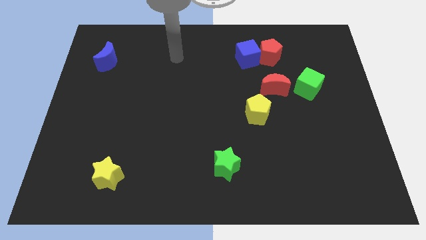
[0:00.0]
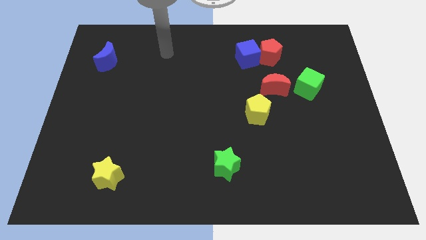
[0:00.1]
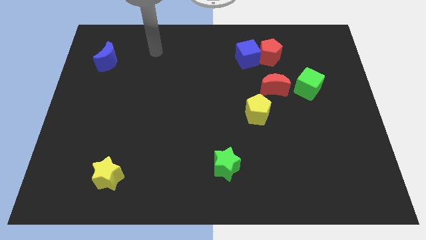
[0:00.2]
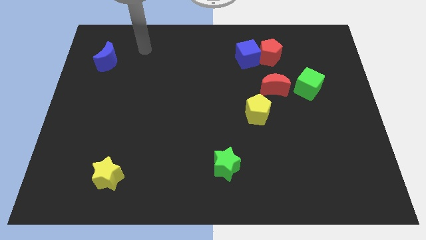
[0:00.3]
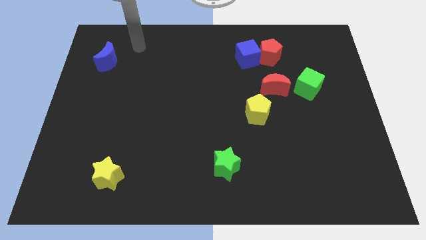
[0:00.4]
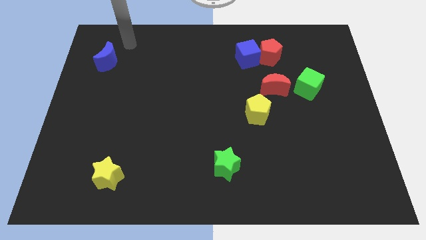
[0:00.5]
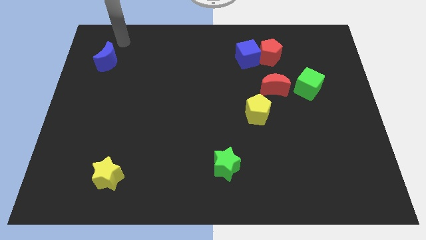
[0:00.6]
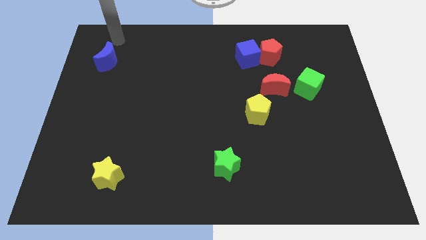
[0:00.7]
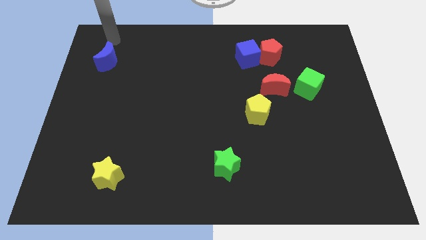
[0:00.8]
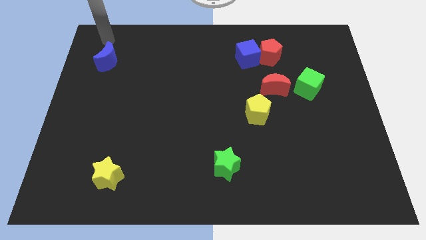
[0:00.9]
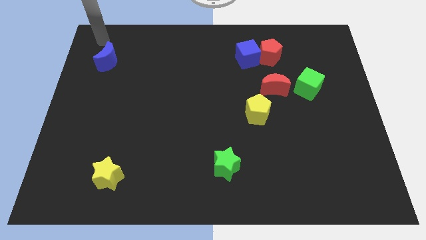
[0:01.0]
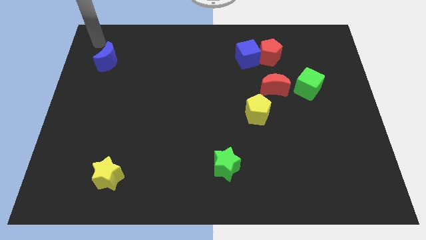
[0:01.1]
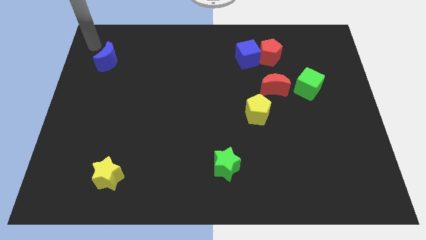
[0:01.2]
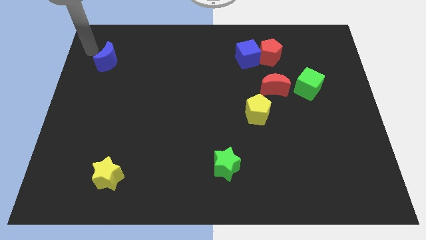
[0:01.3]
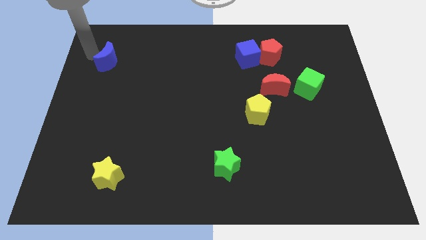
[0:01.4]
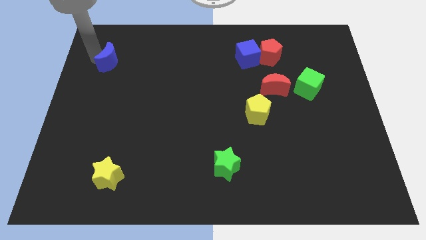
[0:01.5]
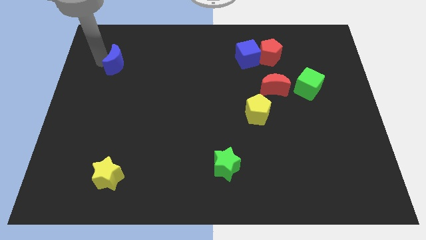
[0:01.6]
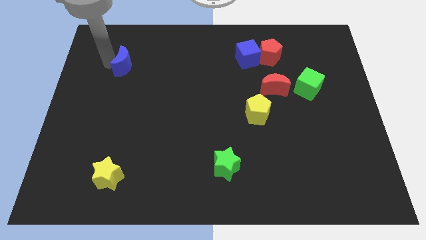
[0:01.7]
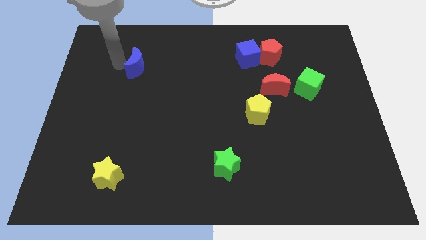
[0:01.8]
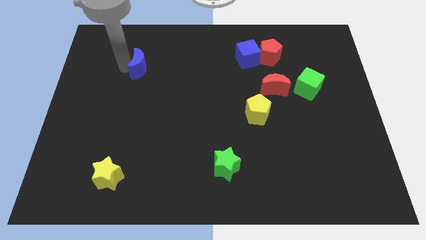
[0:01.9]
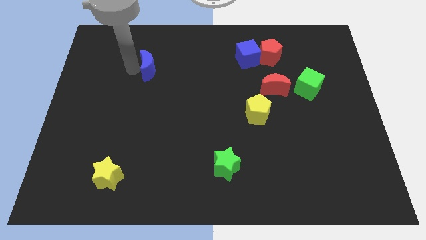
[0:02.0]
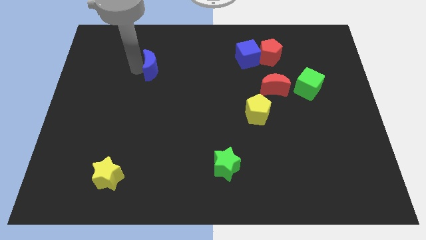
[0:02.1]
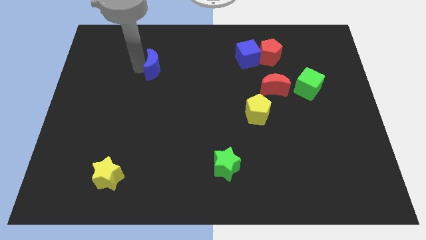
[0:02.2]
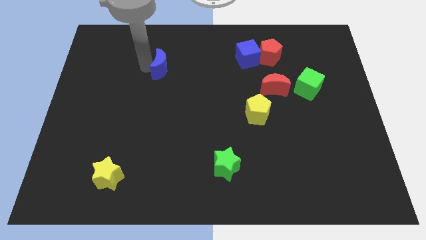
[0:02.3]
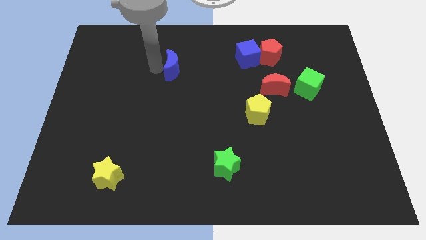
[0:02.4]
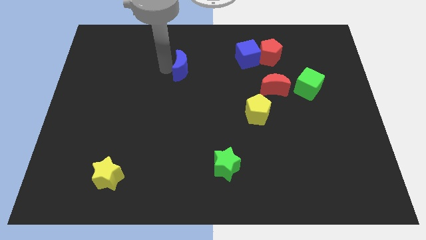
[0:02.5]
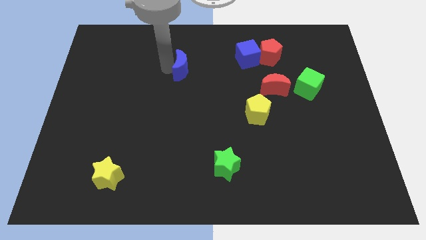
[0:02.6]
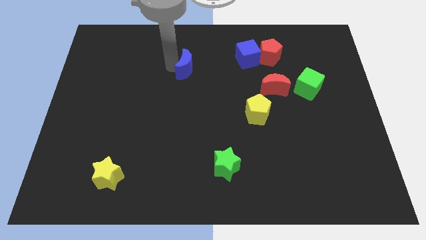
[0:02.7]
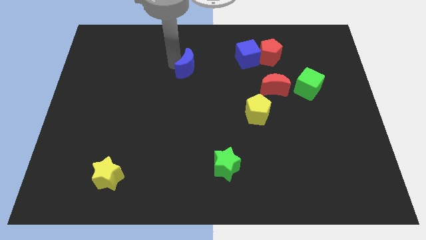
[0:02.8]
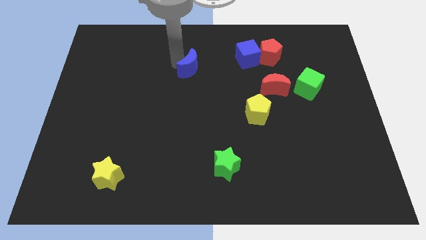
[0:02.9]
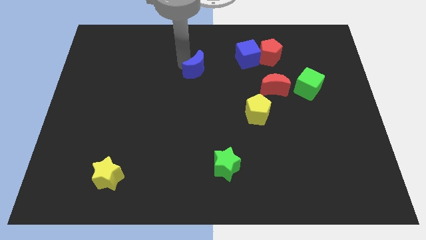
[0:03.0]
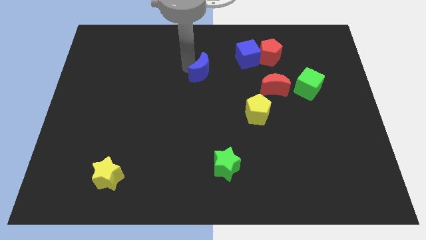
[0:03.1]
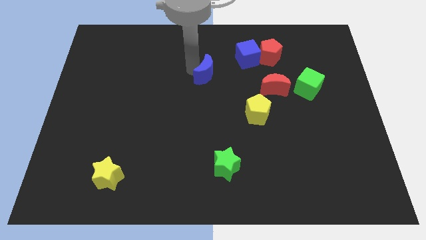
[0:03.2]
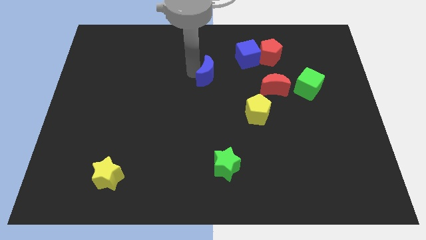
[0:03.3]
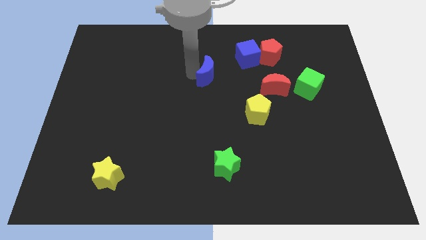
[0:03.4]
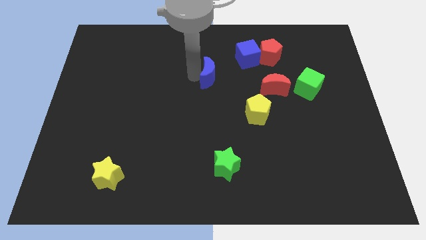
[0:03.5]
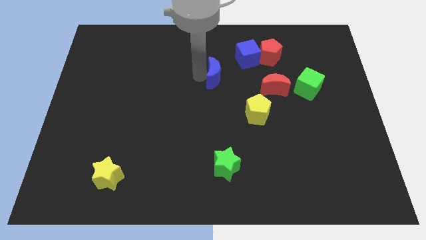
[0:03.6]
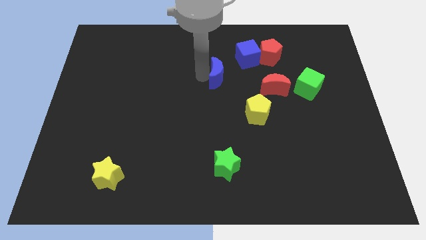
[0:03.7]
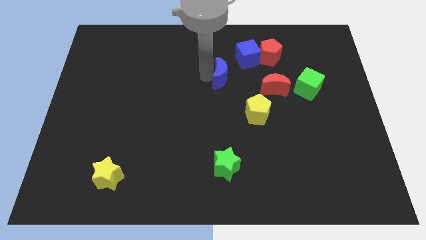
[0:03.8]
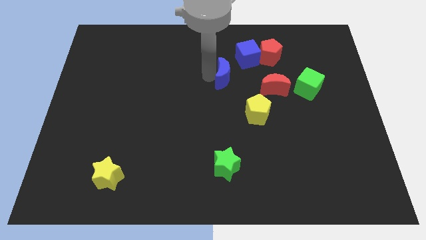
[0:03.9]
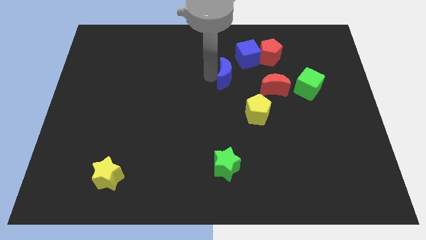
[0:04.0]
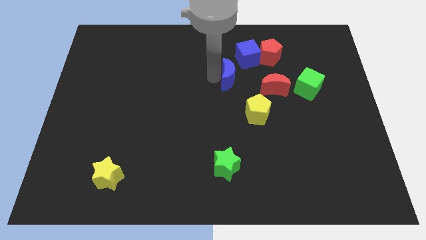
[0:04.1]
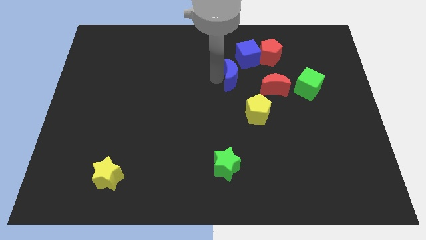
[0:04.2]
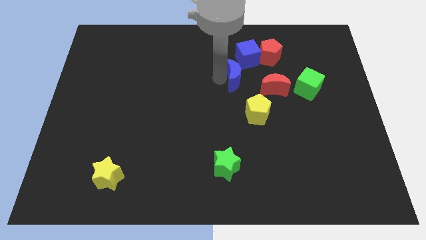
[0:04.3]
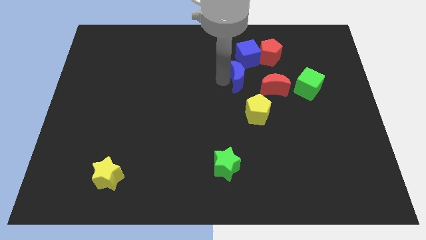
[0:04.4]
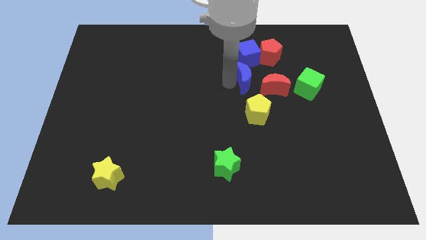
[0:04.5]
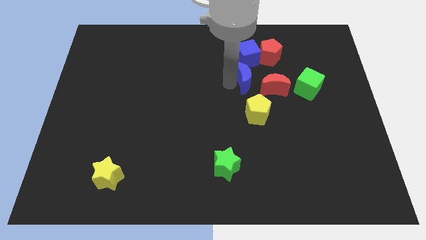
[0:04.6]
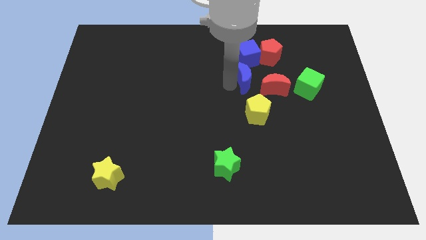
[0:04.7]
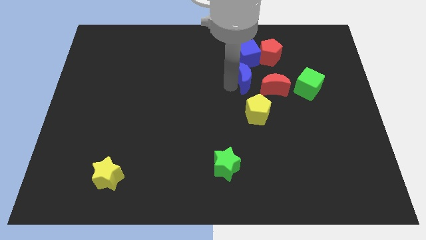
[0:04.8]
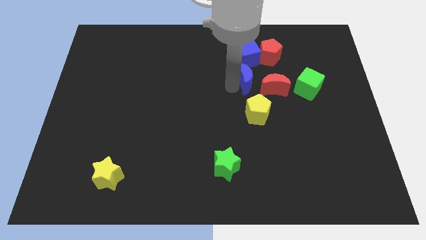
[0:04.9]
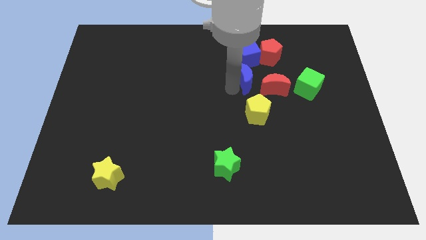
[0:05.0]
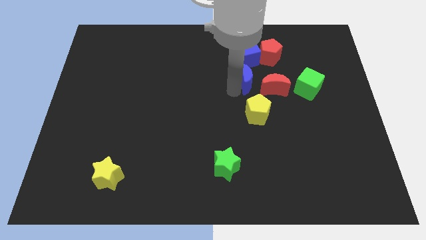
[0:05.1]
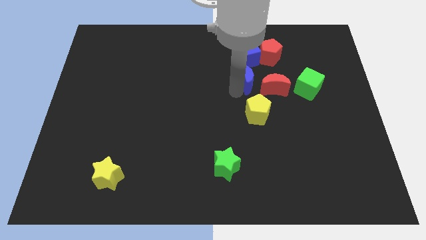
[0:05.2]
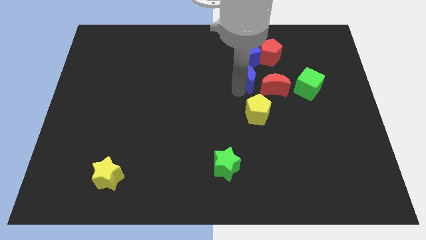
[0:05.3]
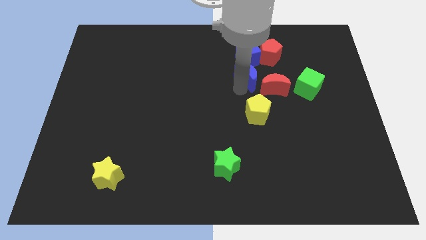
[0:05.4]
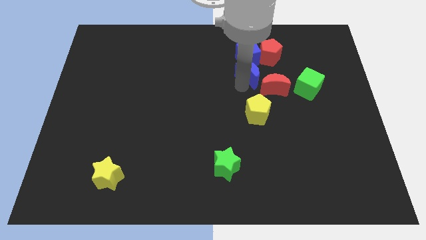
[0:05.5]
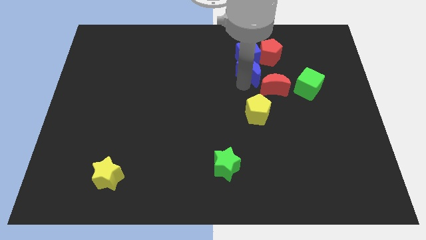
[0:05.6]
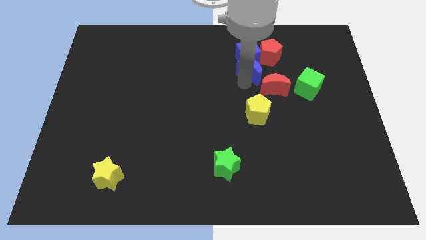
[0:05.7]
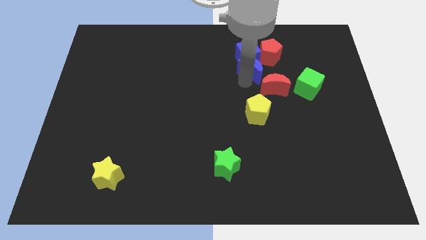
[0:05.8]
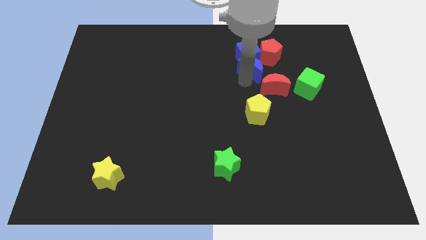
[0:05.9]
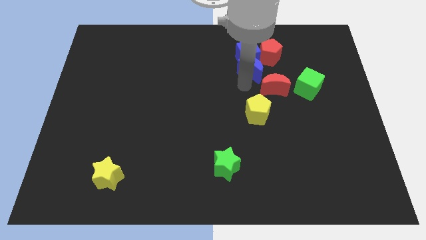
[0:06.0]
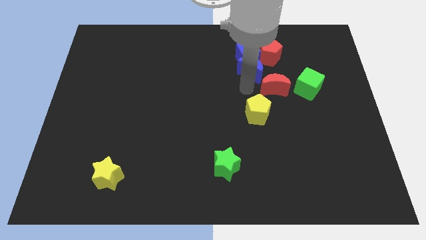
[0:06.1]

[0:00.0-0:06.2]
push the blue crescent to the bottom of the blue cube

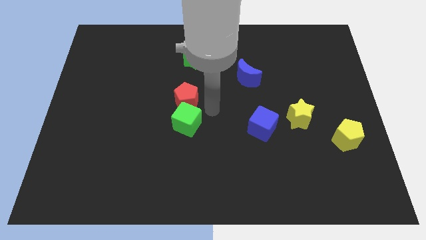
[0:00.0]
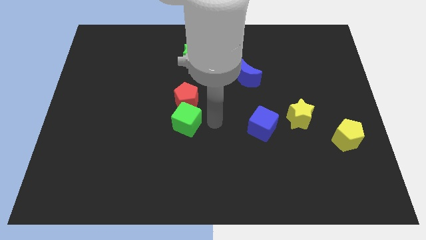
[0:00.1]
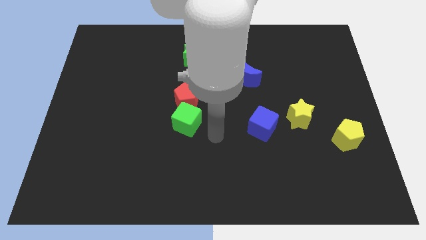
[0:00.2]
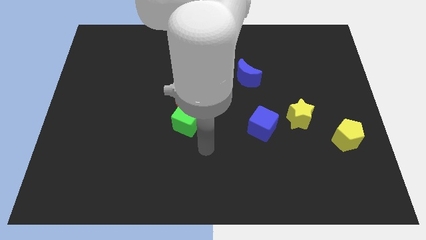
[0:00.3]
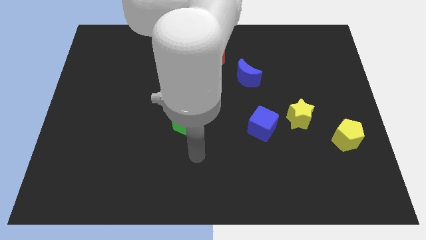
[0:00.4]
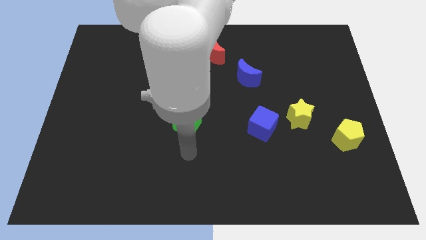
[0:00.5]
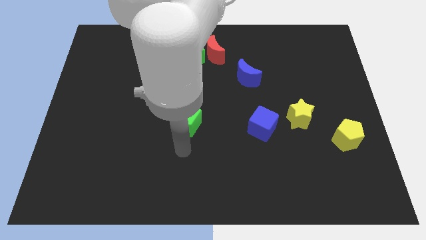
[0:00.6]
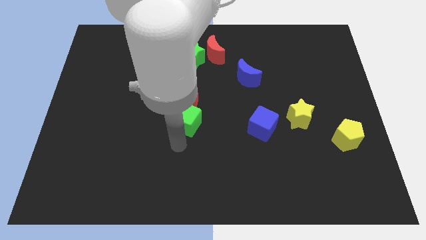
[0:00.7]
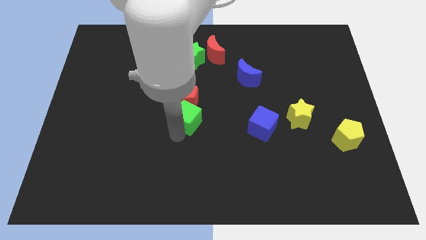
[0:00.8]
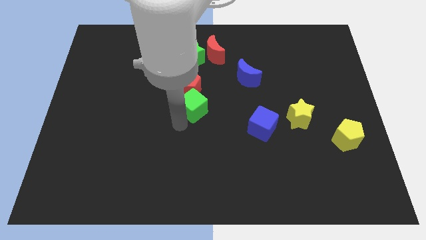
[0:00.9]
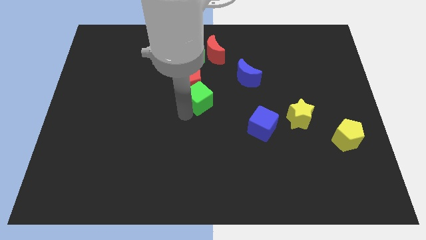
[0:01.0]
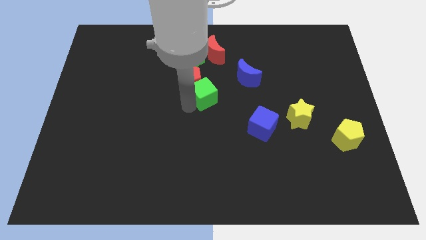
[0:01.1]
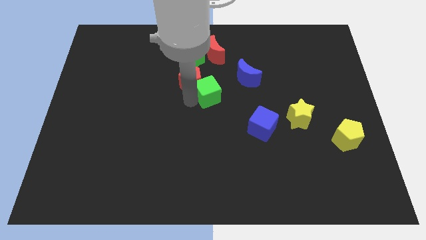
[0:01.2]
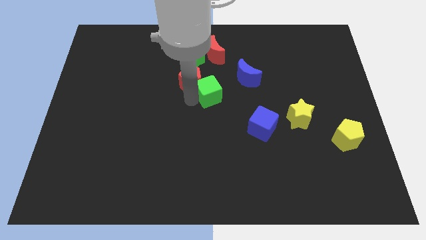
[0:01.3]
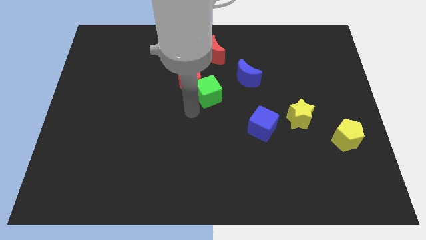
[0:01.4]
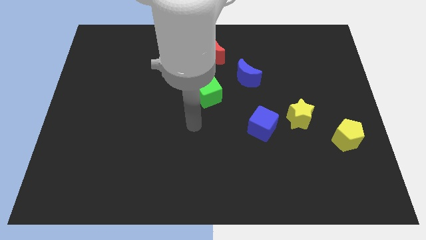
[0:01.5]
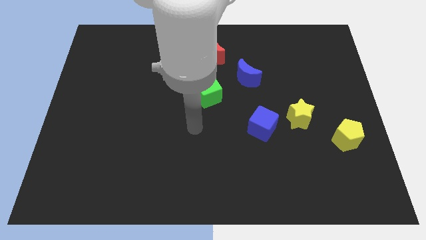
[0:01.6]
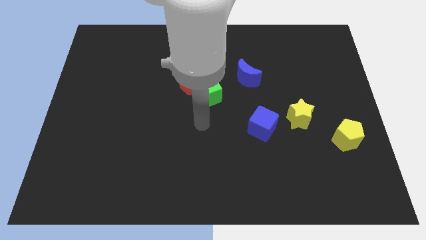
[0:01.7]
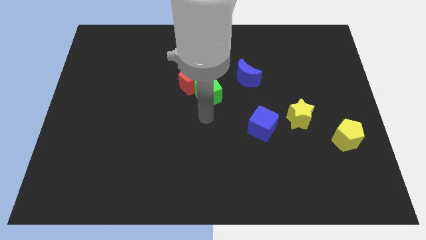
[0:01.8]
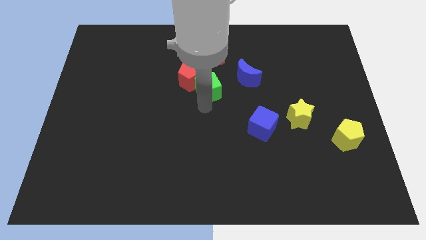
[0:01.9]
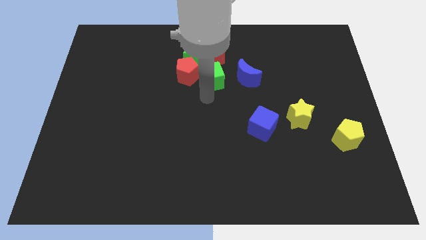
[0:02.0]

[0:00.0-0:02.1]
slightly push the red pentagon and green cube upward

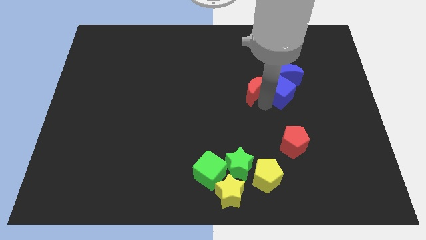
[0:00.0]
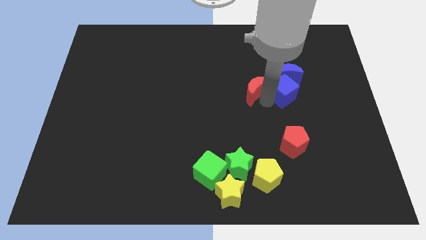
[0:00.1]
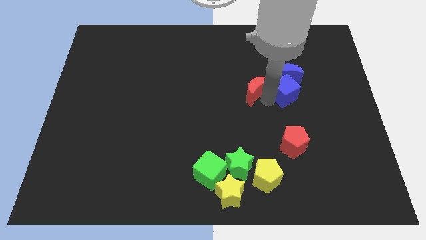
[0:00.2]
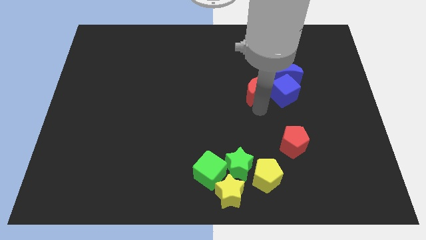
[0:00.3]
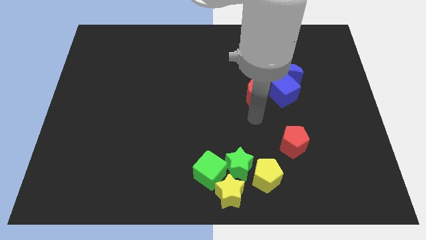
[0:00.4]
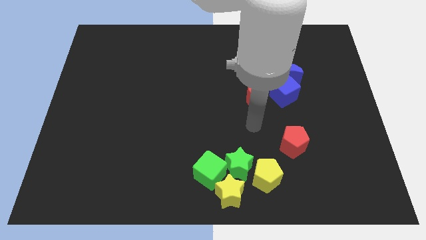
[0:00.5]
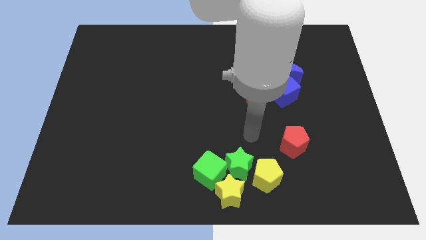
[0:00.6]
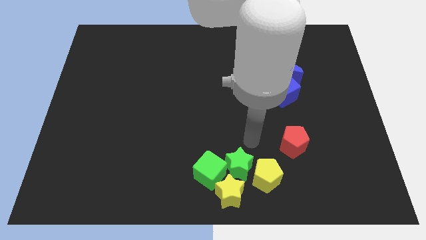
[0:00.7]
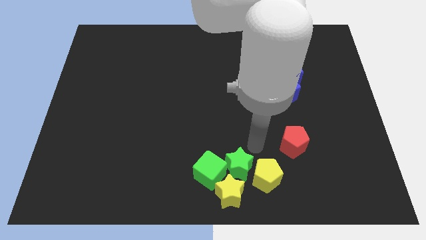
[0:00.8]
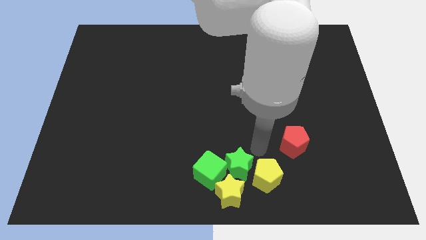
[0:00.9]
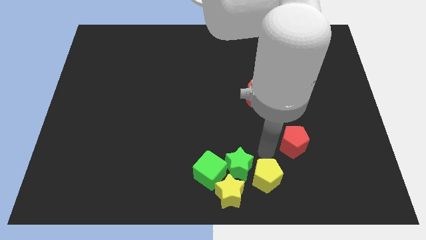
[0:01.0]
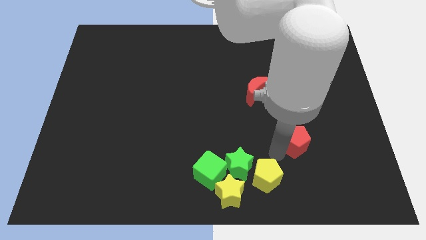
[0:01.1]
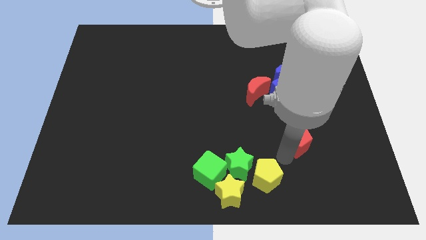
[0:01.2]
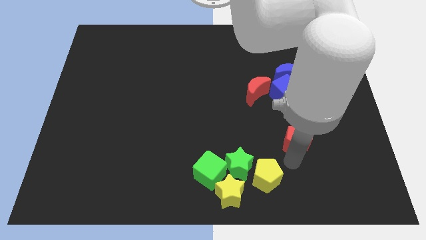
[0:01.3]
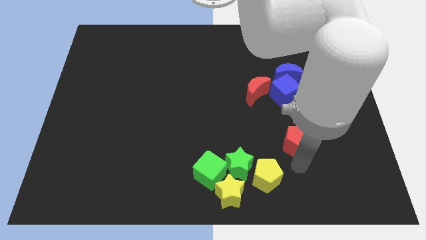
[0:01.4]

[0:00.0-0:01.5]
move the blue cube below the blue moon
